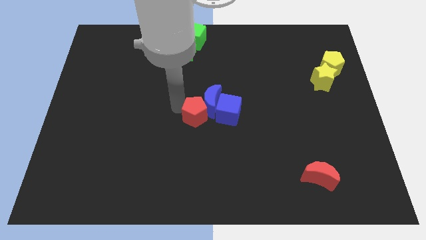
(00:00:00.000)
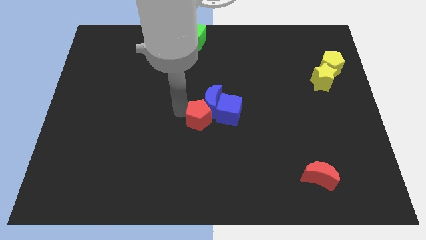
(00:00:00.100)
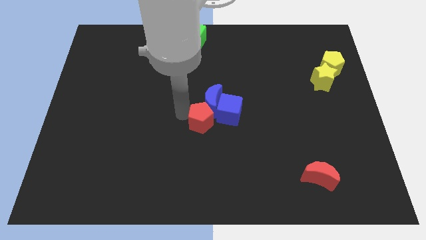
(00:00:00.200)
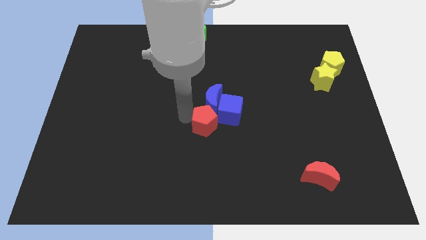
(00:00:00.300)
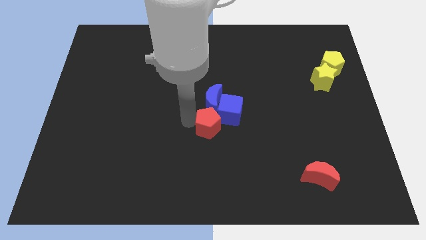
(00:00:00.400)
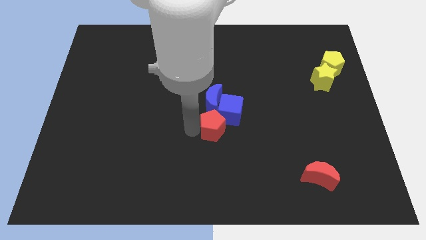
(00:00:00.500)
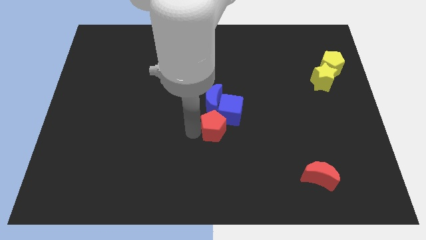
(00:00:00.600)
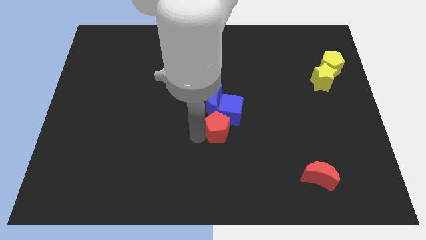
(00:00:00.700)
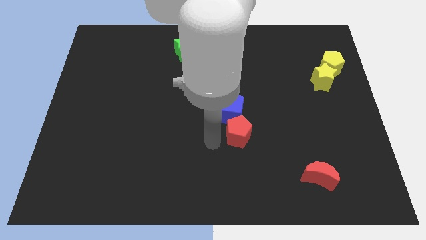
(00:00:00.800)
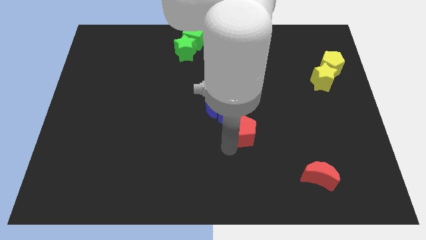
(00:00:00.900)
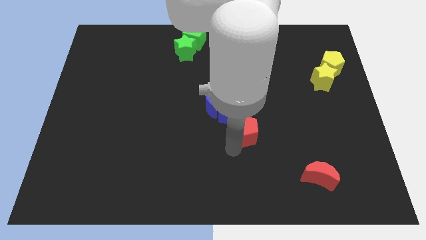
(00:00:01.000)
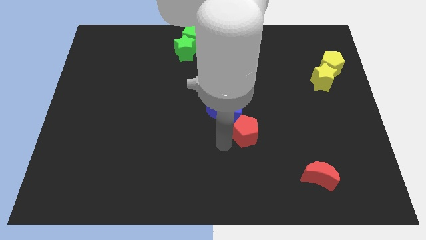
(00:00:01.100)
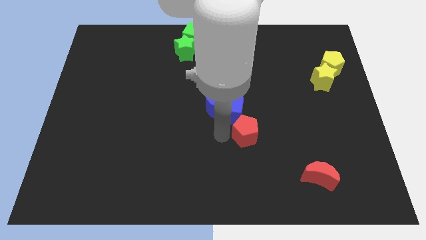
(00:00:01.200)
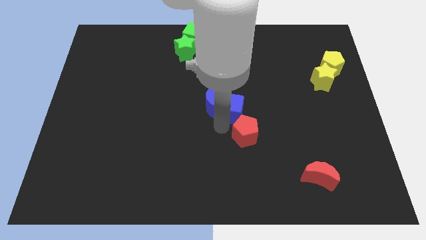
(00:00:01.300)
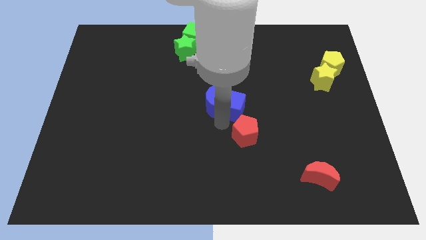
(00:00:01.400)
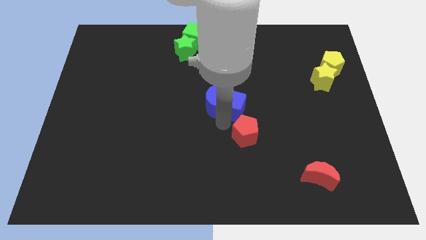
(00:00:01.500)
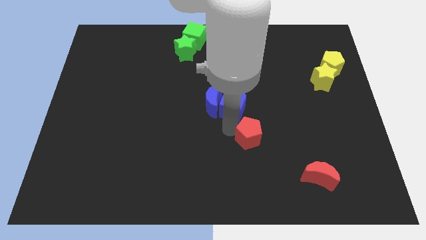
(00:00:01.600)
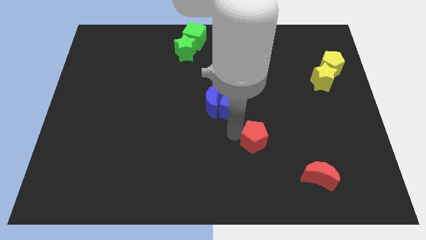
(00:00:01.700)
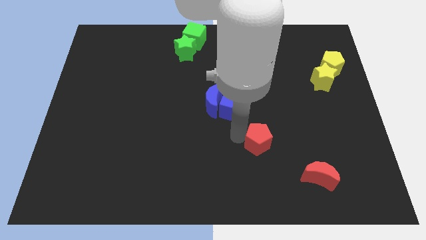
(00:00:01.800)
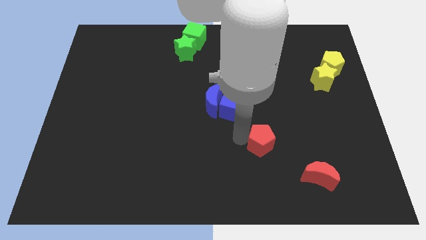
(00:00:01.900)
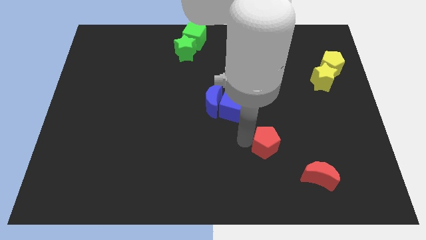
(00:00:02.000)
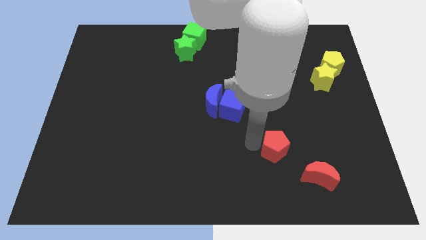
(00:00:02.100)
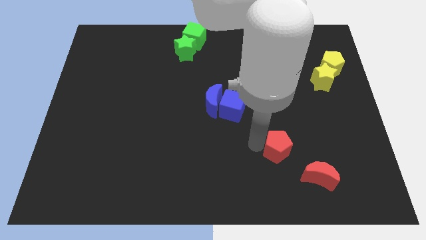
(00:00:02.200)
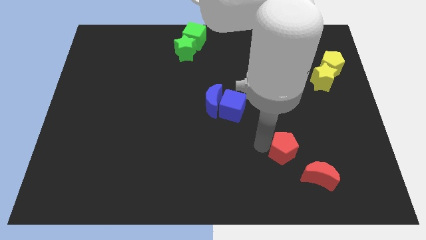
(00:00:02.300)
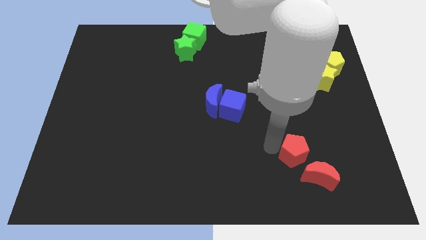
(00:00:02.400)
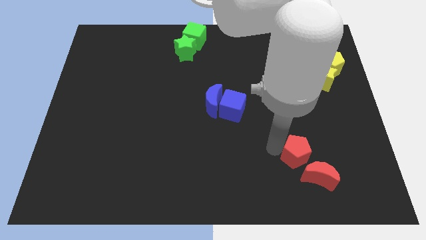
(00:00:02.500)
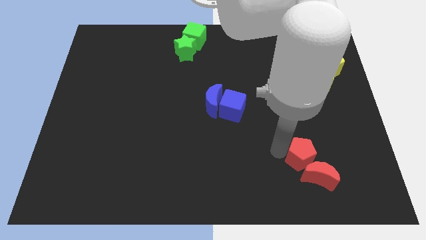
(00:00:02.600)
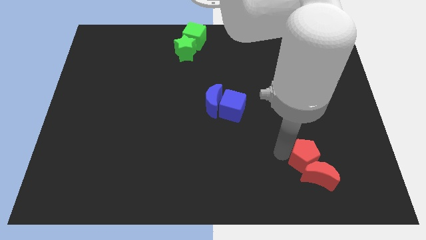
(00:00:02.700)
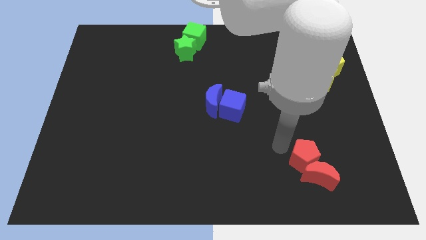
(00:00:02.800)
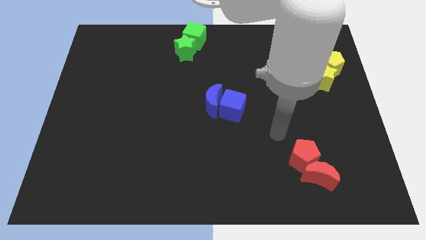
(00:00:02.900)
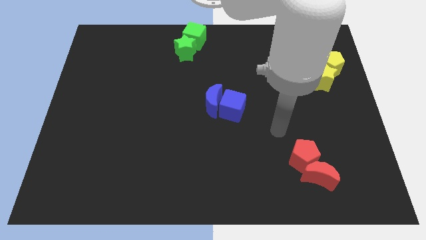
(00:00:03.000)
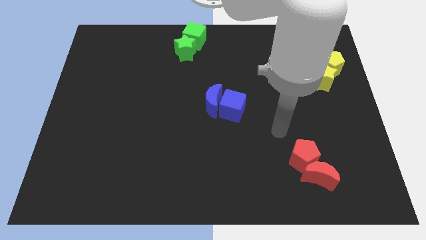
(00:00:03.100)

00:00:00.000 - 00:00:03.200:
move red pentagon close to red moon

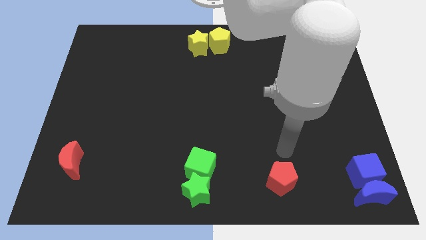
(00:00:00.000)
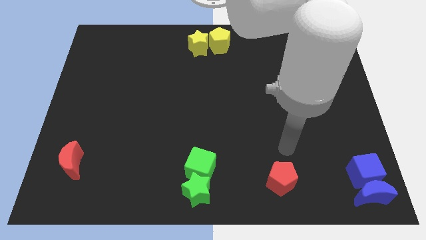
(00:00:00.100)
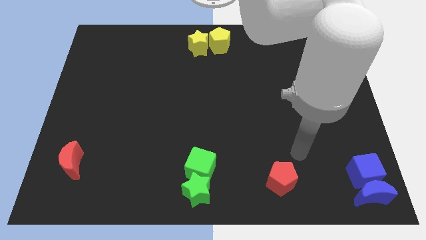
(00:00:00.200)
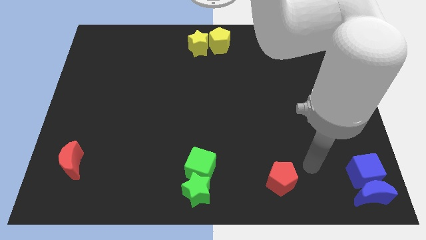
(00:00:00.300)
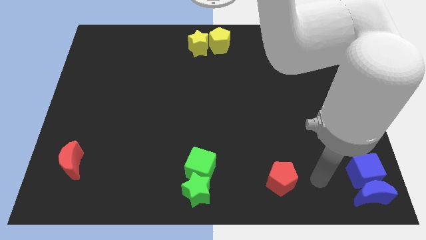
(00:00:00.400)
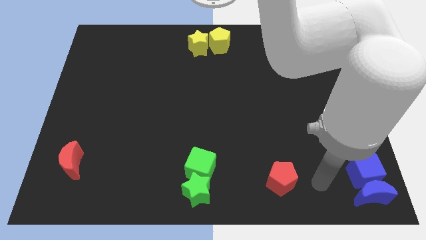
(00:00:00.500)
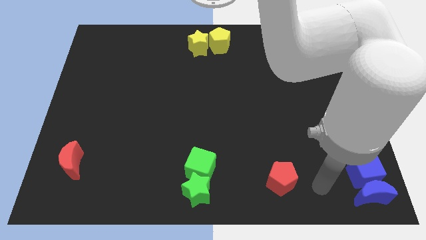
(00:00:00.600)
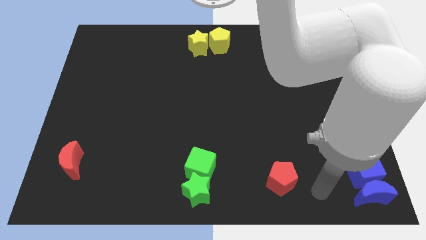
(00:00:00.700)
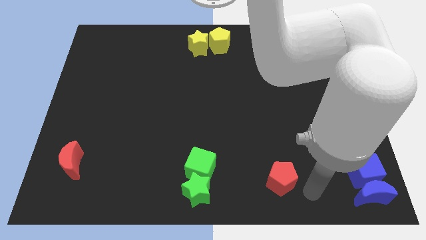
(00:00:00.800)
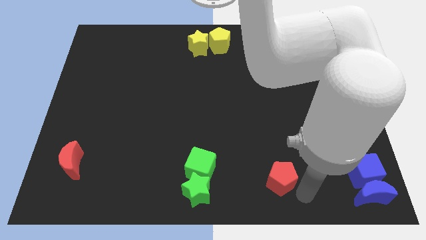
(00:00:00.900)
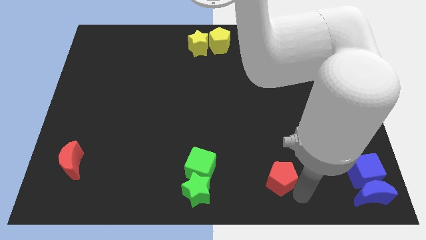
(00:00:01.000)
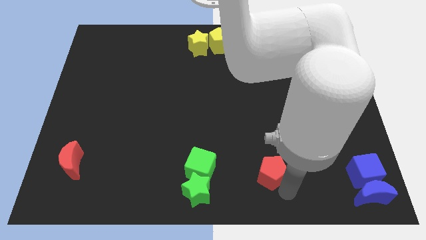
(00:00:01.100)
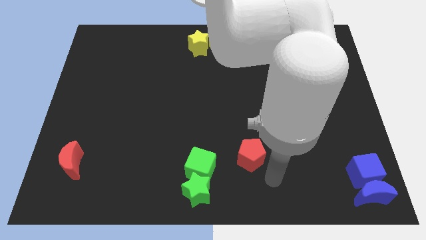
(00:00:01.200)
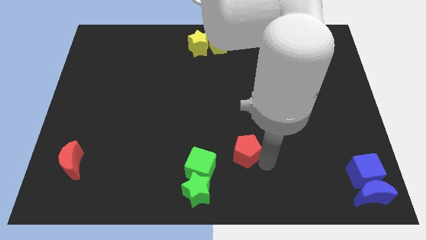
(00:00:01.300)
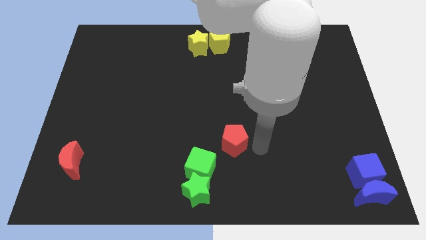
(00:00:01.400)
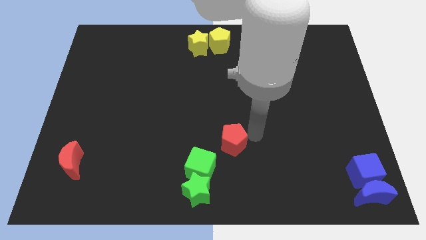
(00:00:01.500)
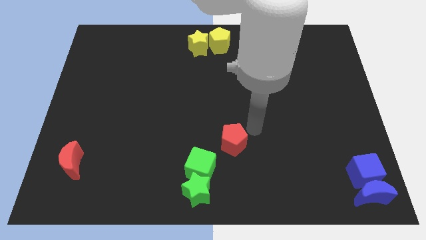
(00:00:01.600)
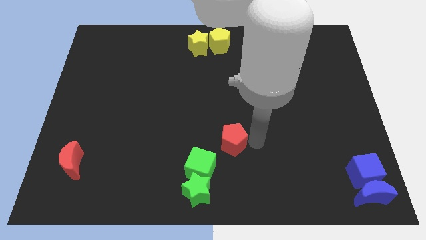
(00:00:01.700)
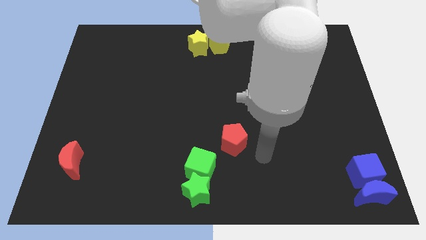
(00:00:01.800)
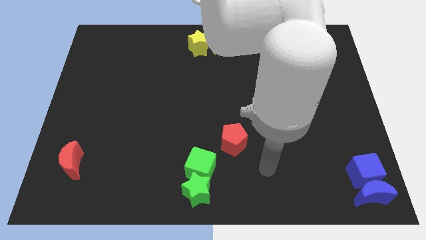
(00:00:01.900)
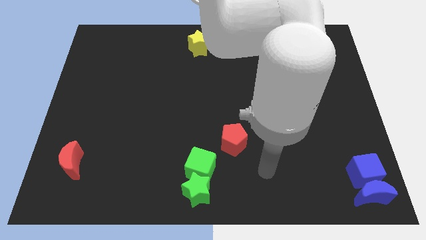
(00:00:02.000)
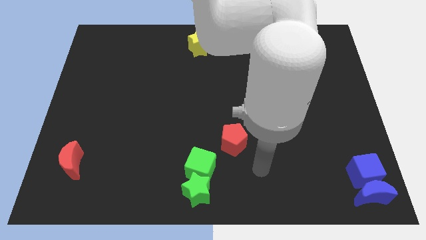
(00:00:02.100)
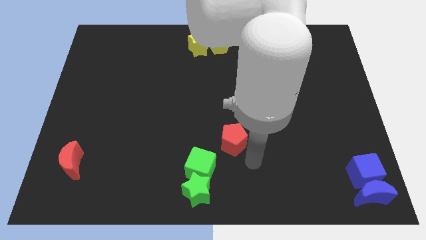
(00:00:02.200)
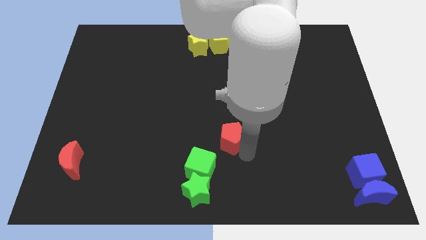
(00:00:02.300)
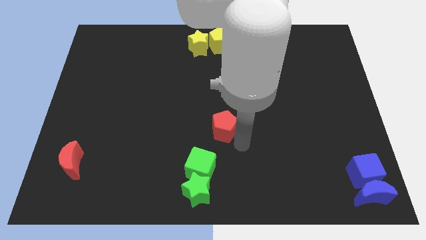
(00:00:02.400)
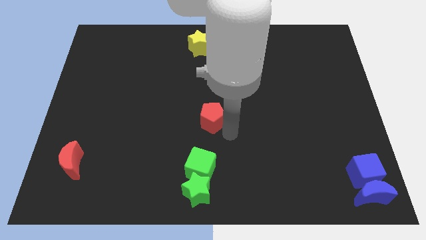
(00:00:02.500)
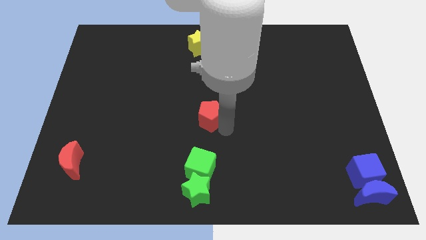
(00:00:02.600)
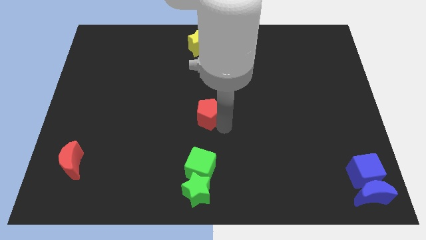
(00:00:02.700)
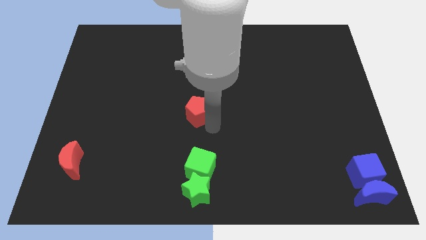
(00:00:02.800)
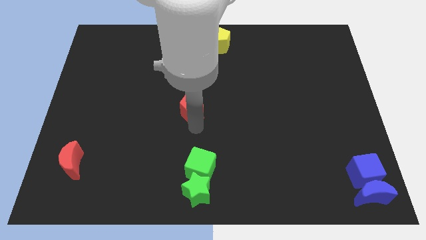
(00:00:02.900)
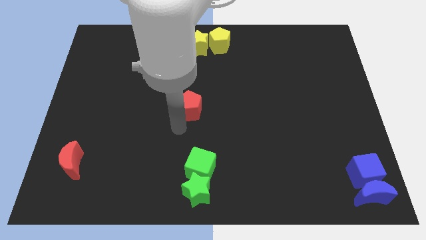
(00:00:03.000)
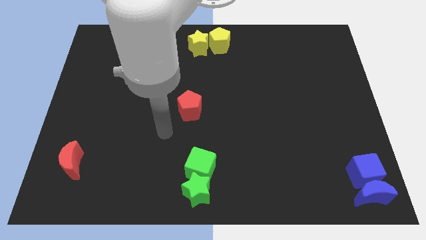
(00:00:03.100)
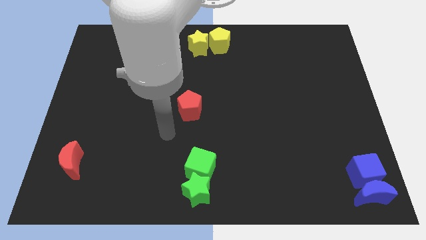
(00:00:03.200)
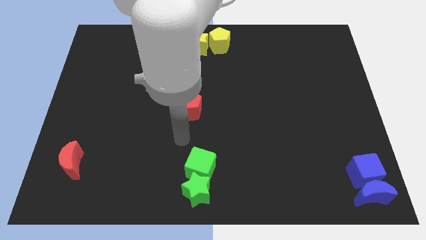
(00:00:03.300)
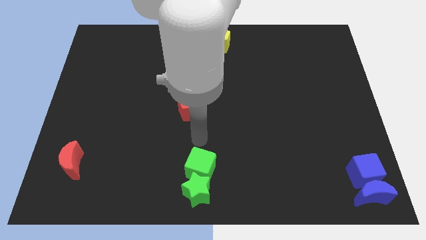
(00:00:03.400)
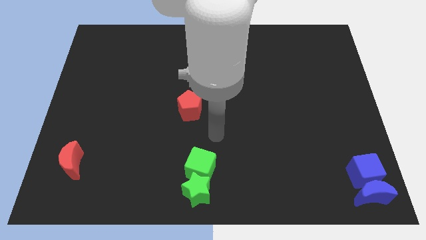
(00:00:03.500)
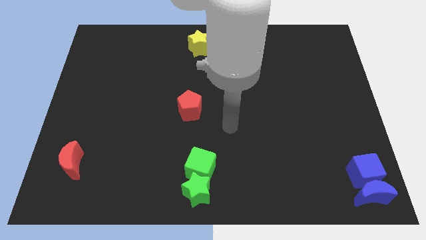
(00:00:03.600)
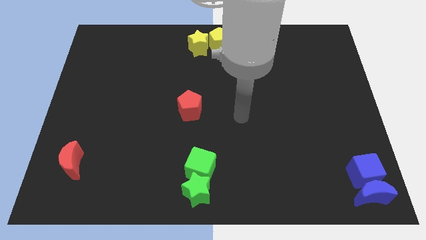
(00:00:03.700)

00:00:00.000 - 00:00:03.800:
move the red pentagon to the center of board

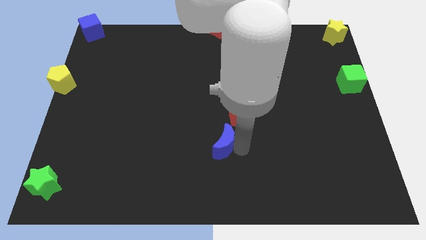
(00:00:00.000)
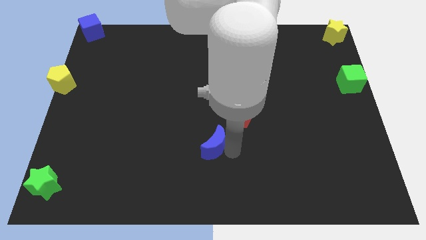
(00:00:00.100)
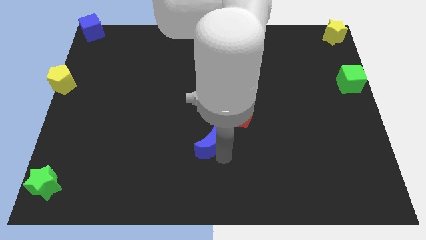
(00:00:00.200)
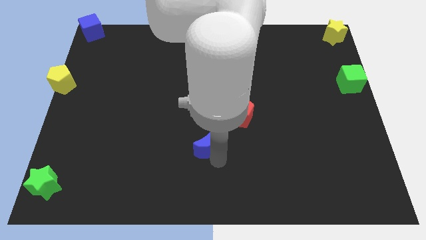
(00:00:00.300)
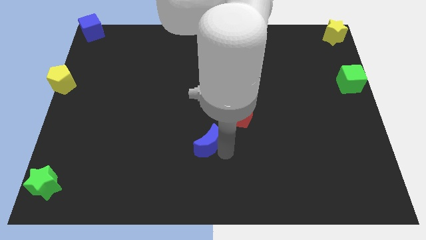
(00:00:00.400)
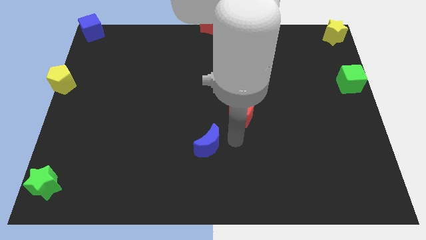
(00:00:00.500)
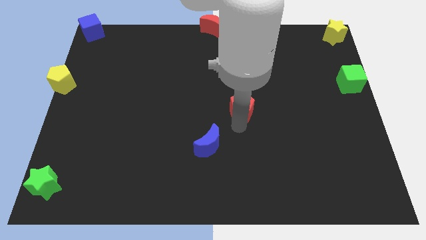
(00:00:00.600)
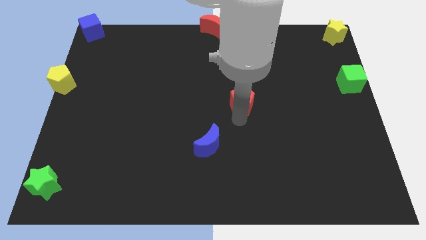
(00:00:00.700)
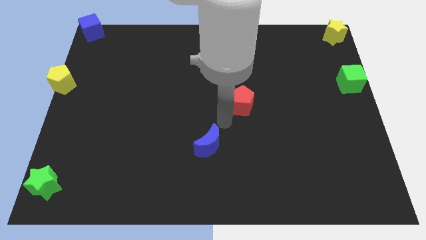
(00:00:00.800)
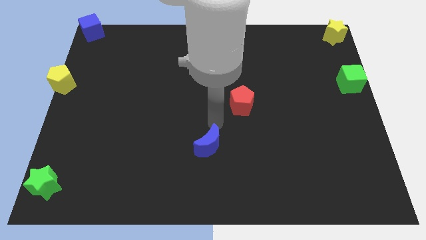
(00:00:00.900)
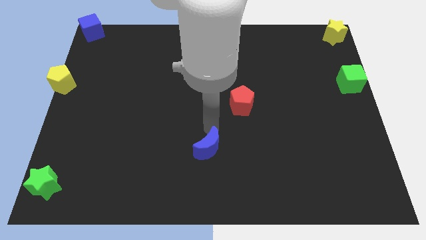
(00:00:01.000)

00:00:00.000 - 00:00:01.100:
separate the blue moon and red pentagon

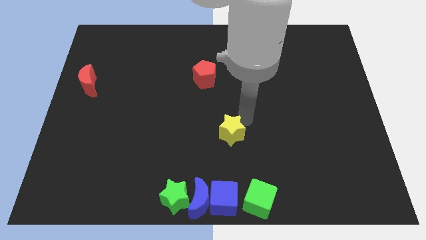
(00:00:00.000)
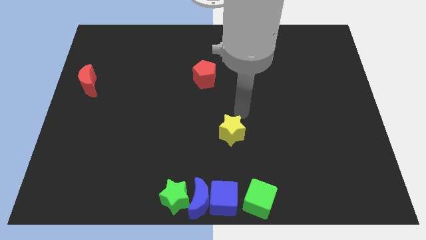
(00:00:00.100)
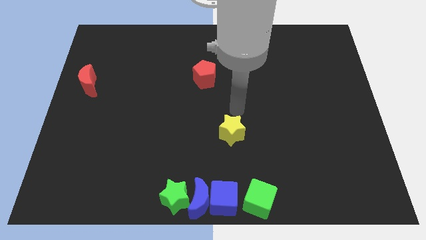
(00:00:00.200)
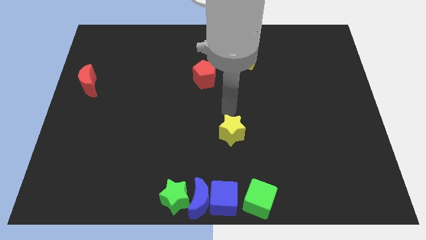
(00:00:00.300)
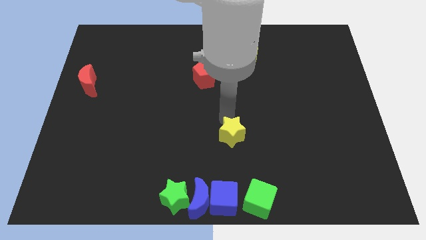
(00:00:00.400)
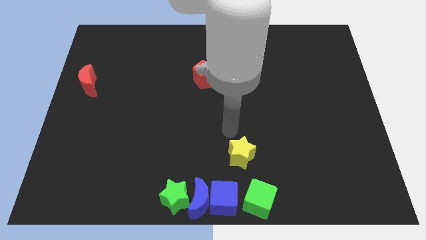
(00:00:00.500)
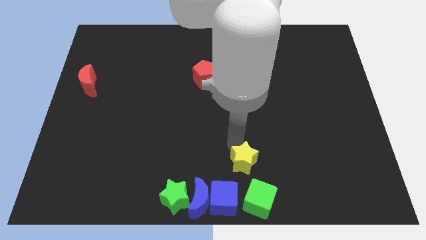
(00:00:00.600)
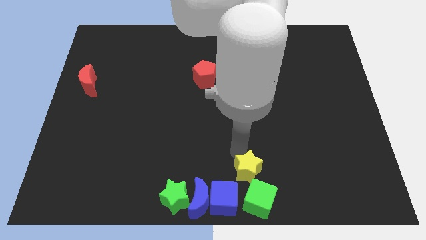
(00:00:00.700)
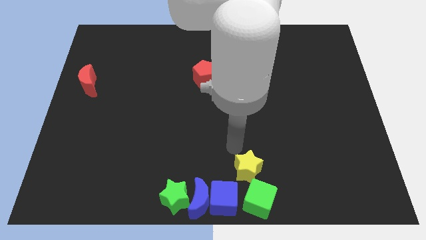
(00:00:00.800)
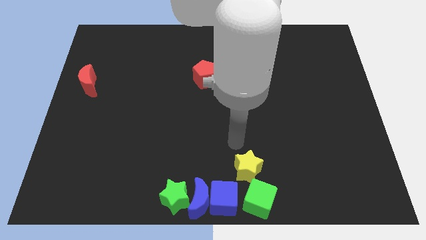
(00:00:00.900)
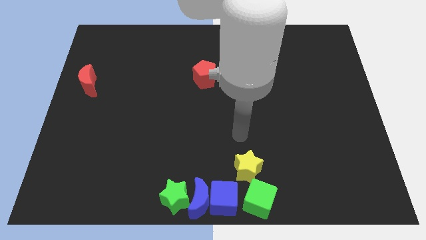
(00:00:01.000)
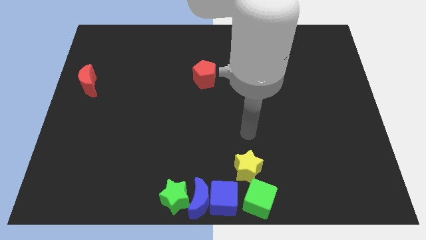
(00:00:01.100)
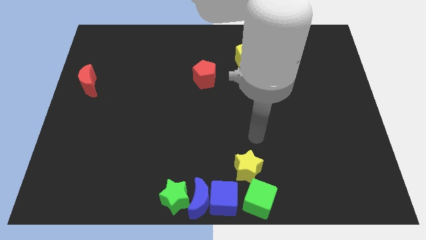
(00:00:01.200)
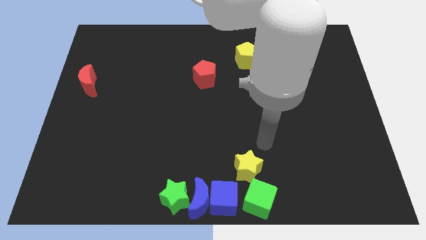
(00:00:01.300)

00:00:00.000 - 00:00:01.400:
move the yellow star to the top left of the green cube
